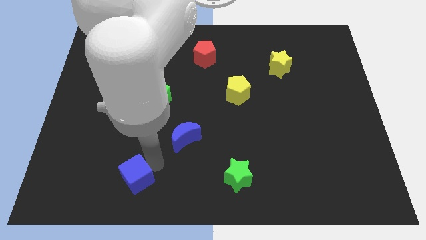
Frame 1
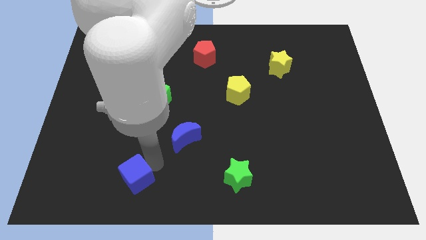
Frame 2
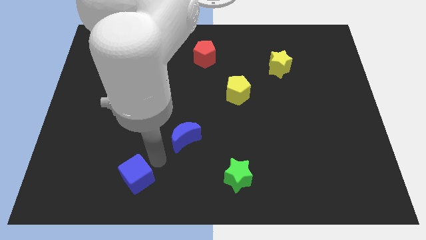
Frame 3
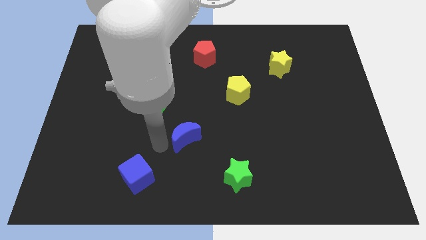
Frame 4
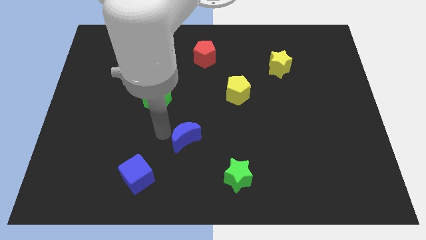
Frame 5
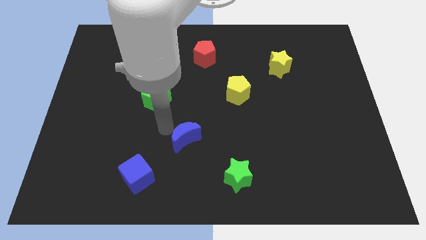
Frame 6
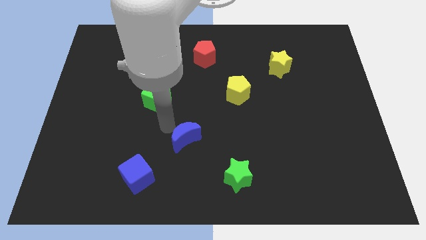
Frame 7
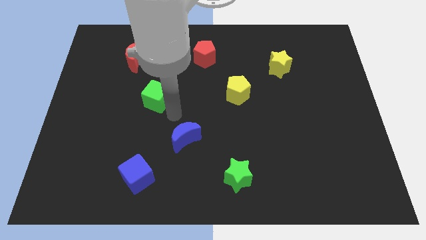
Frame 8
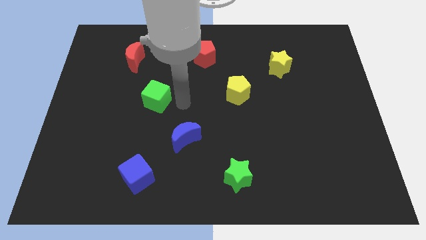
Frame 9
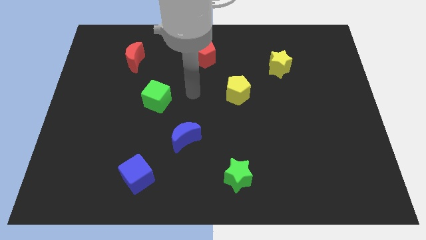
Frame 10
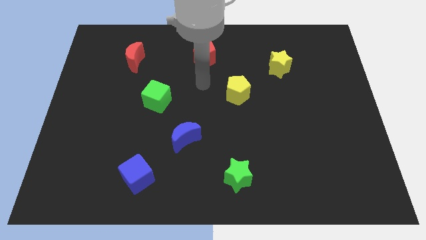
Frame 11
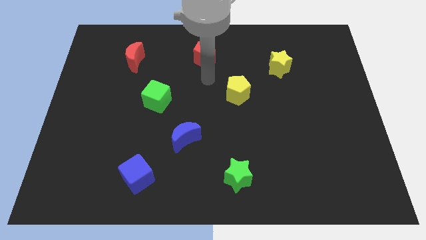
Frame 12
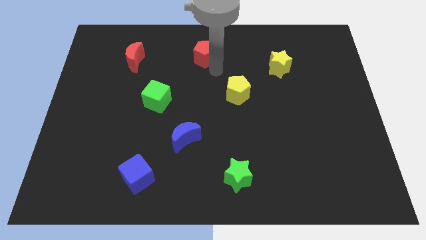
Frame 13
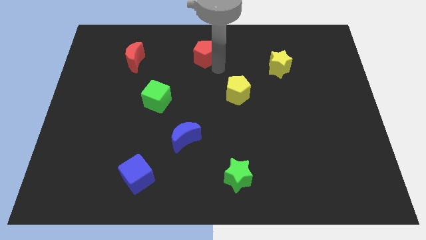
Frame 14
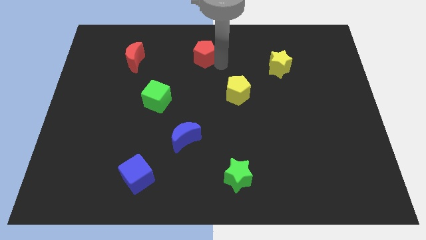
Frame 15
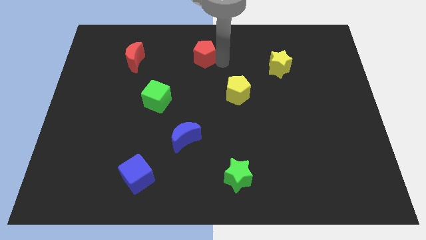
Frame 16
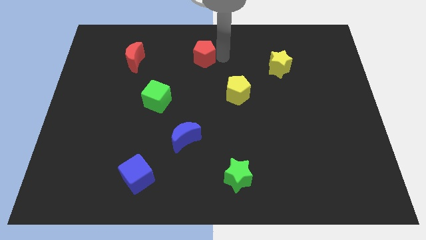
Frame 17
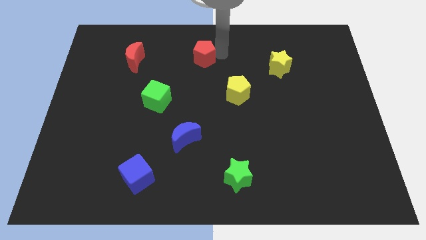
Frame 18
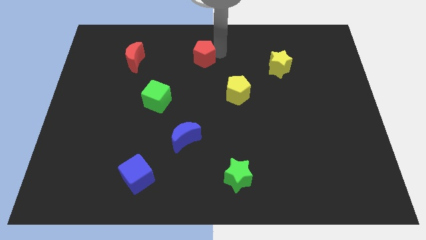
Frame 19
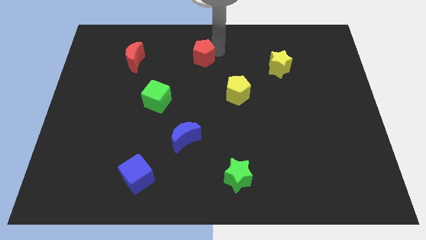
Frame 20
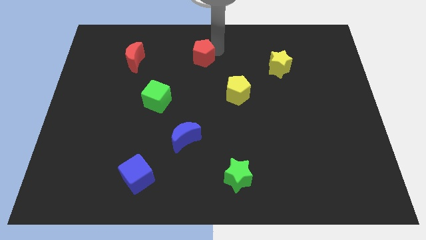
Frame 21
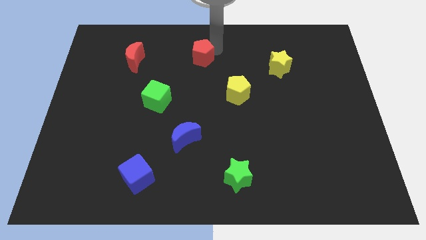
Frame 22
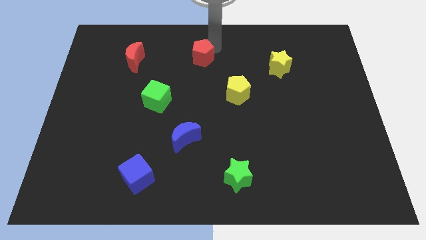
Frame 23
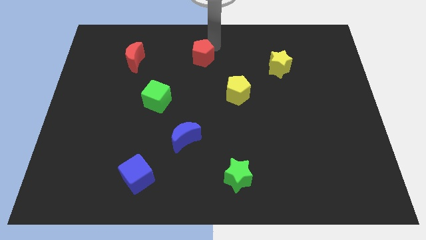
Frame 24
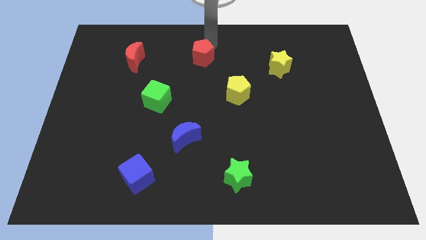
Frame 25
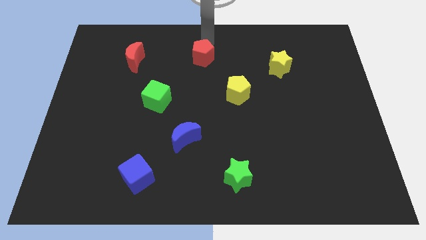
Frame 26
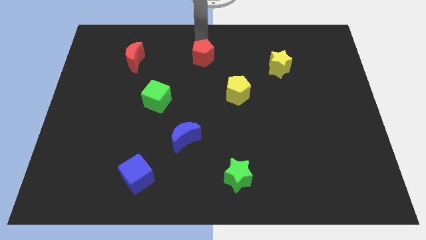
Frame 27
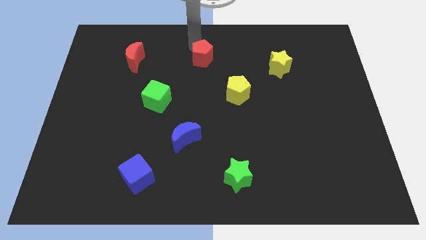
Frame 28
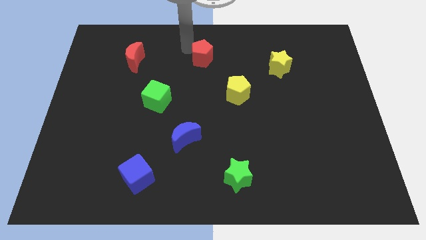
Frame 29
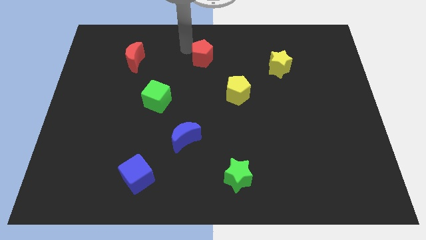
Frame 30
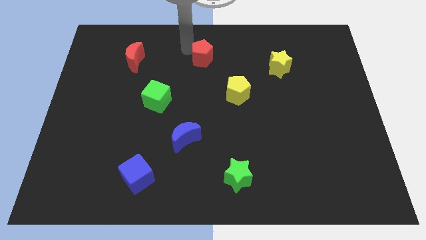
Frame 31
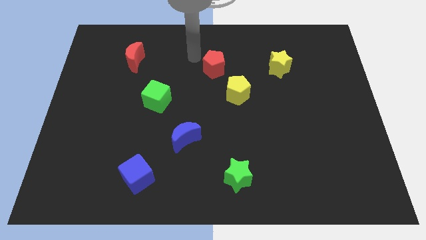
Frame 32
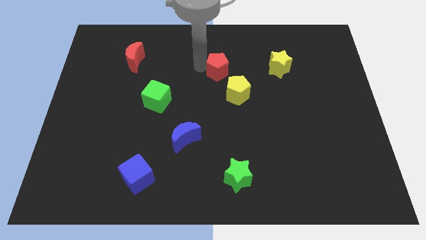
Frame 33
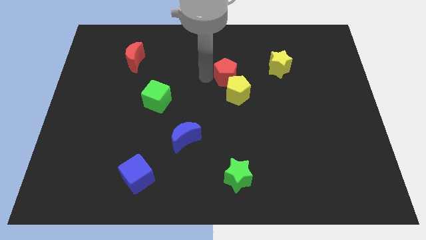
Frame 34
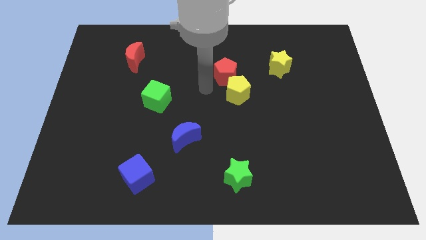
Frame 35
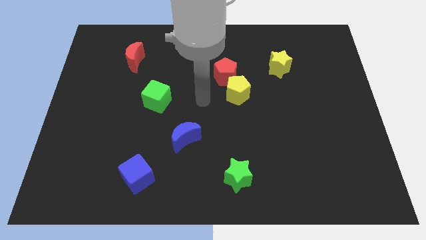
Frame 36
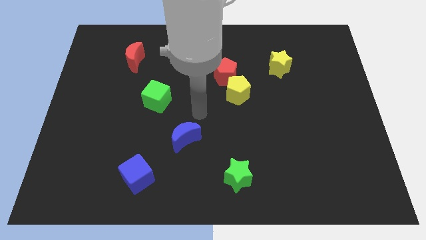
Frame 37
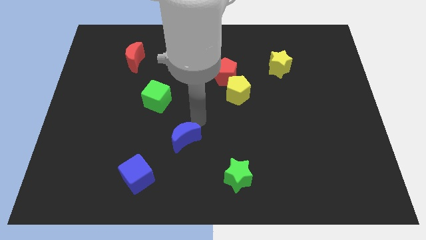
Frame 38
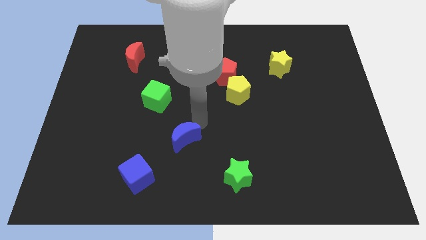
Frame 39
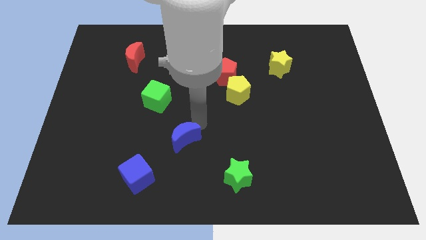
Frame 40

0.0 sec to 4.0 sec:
move the red pentagon close to the yellow pentagon

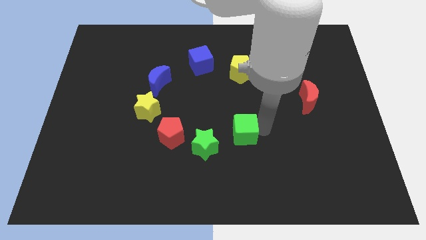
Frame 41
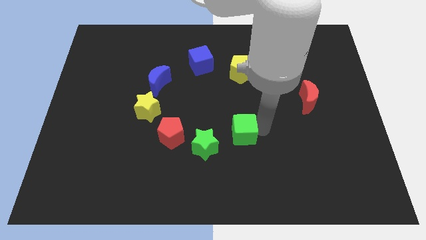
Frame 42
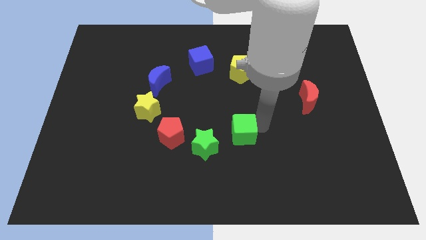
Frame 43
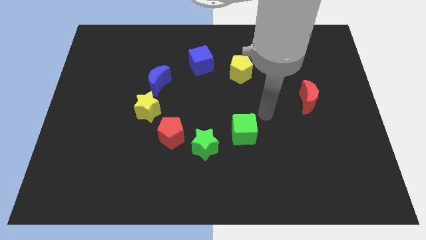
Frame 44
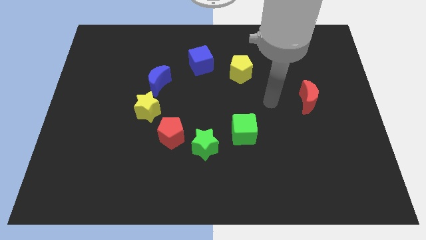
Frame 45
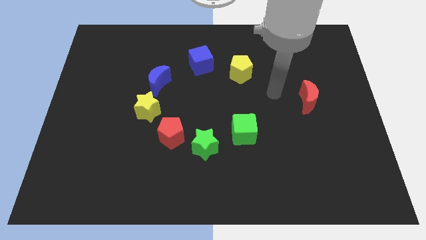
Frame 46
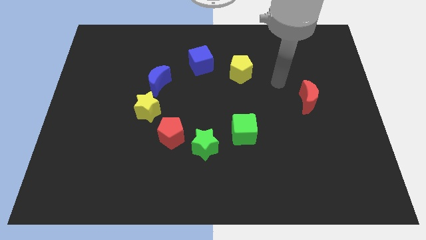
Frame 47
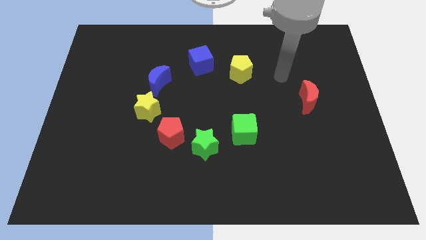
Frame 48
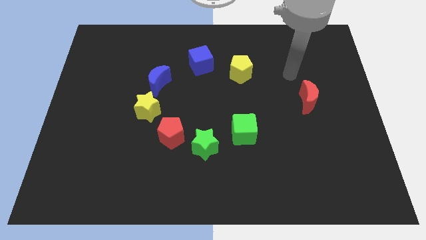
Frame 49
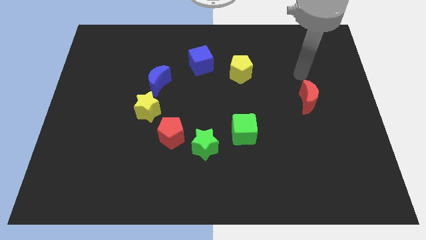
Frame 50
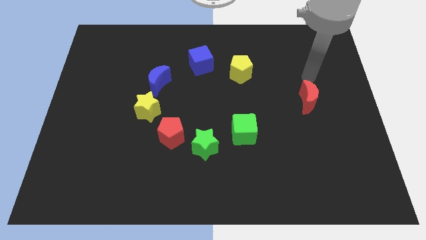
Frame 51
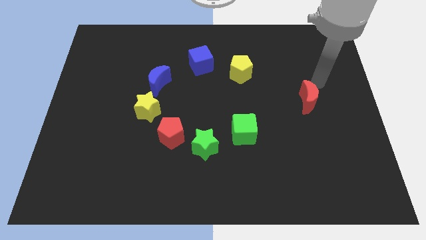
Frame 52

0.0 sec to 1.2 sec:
place your arm to the top of red moon

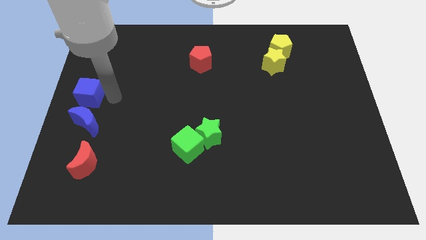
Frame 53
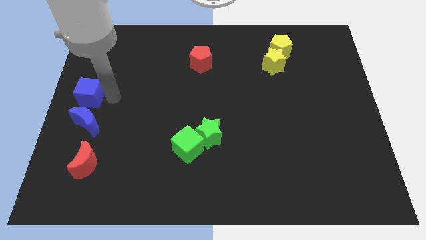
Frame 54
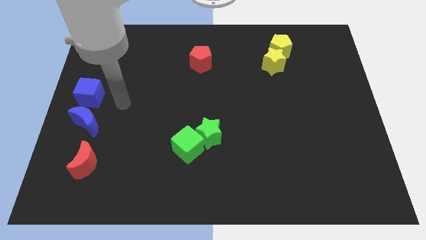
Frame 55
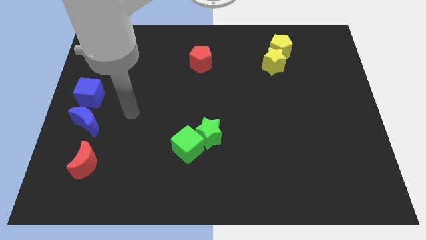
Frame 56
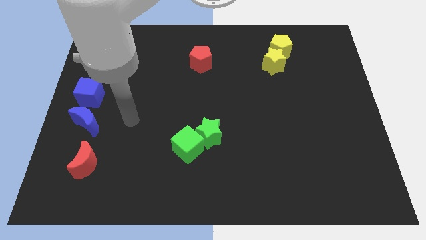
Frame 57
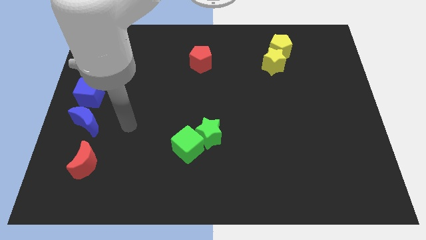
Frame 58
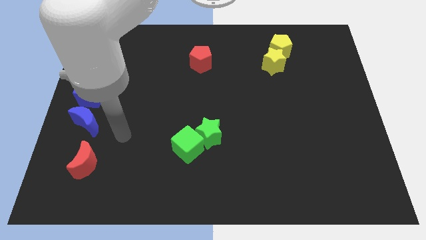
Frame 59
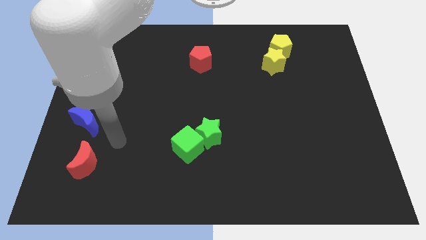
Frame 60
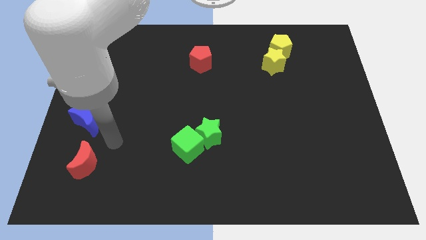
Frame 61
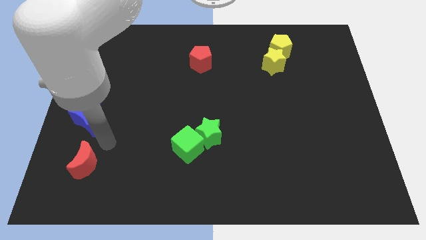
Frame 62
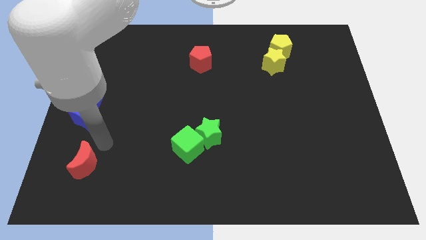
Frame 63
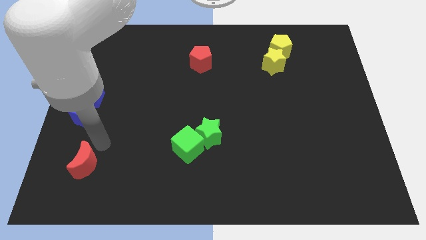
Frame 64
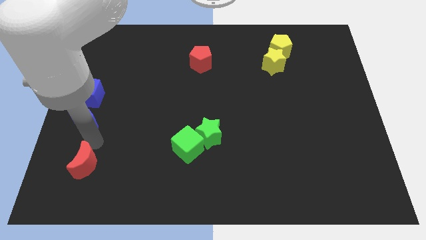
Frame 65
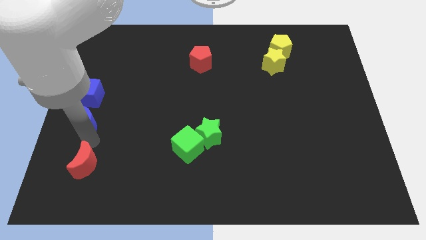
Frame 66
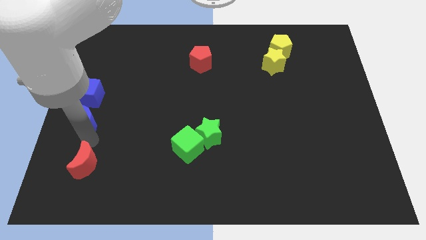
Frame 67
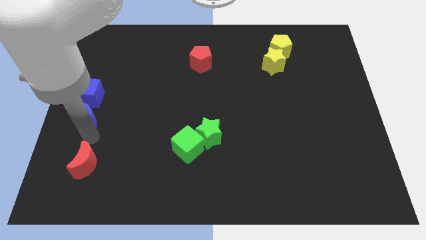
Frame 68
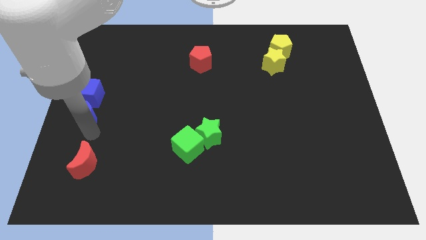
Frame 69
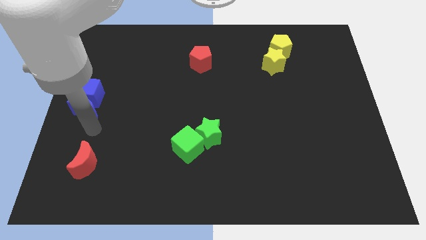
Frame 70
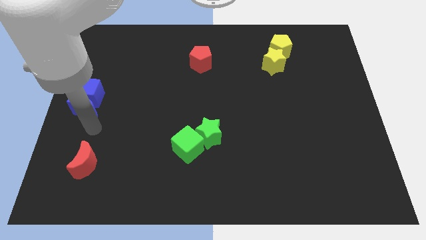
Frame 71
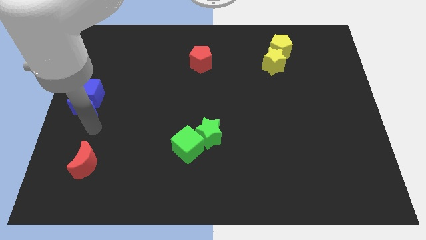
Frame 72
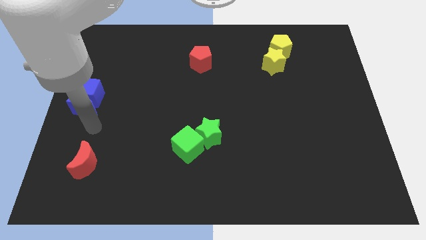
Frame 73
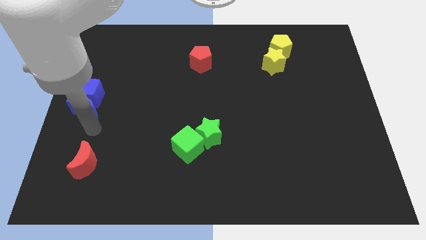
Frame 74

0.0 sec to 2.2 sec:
push the blue moon into the blue cube

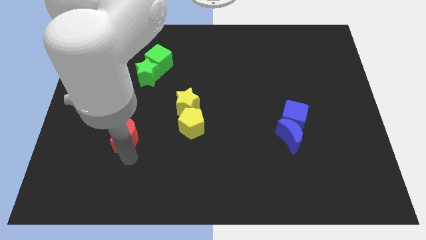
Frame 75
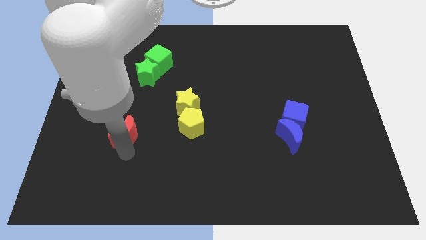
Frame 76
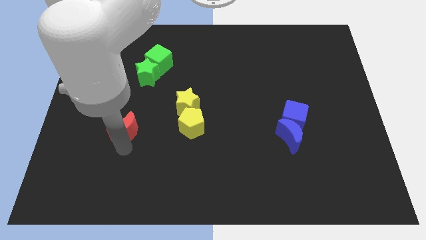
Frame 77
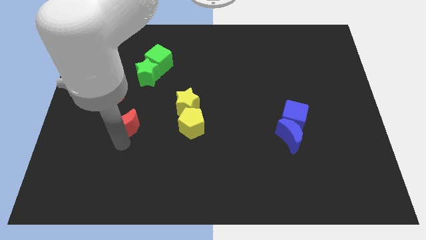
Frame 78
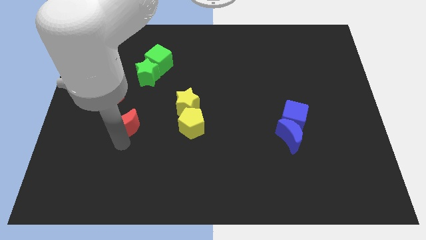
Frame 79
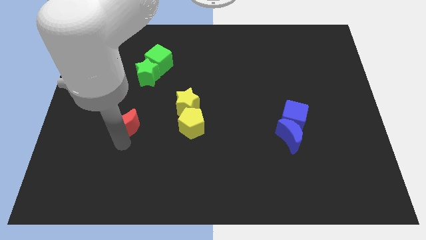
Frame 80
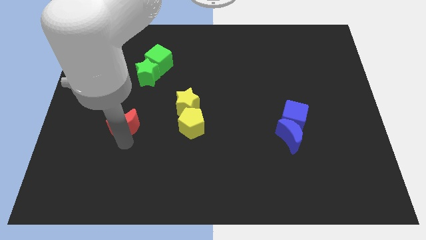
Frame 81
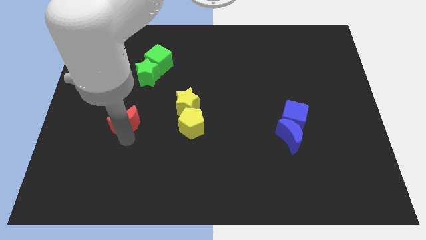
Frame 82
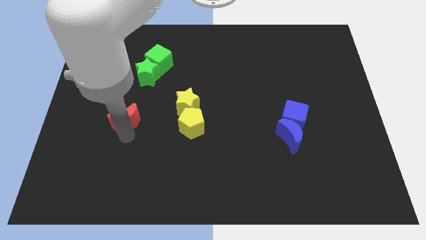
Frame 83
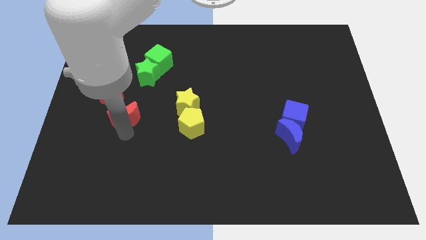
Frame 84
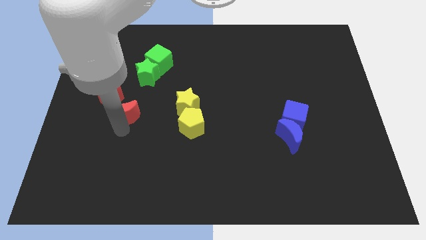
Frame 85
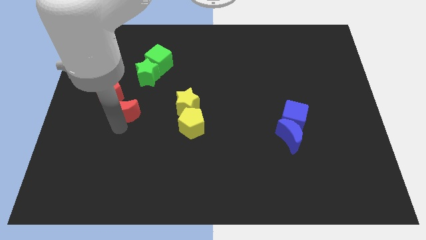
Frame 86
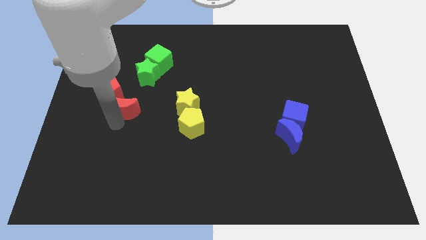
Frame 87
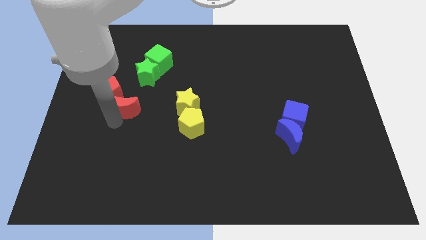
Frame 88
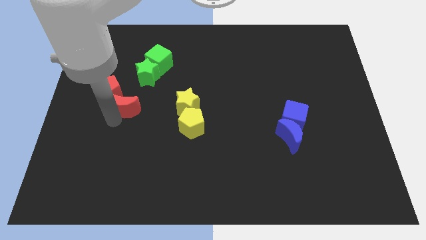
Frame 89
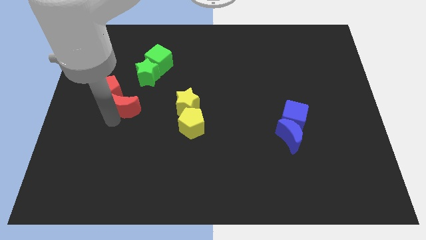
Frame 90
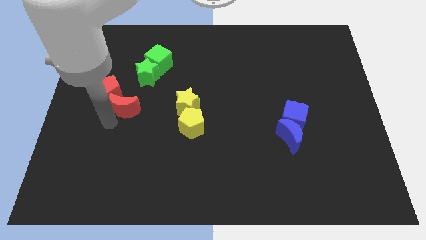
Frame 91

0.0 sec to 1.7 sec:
push the red crescent to the bottom right of the red pentagon

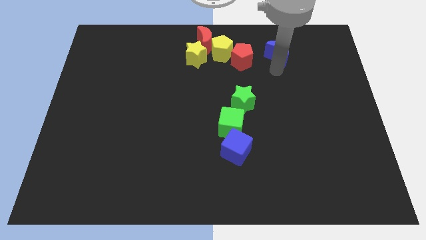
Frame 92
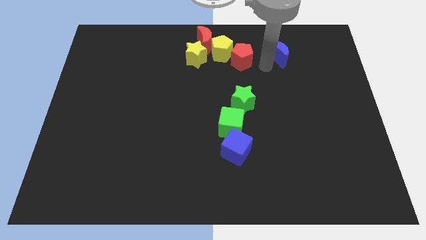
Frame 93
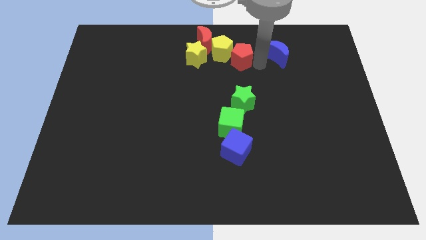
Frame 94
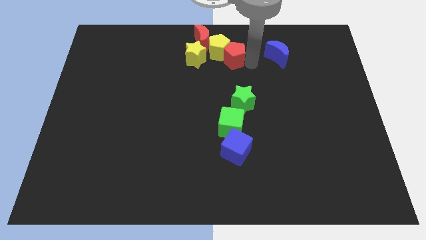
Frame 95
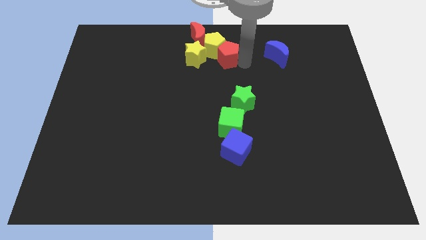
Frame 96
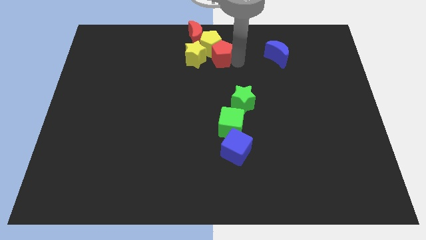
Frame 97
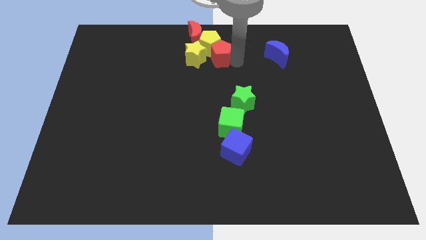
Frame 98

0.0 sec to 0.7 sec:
place the red pentagon to the right of the yellow star
